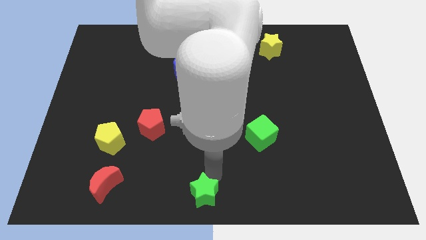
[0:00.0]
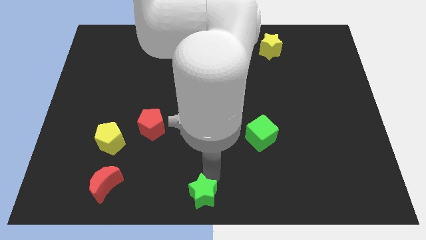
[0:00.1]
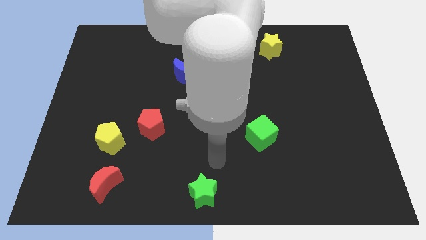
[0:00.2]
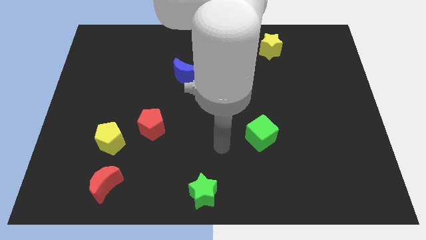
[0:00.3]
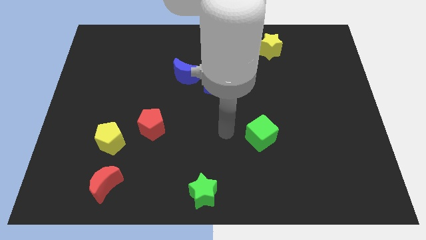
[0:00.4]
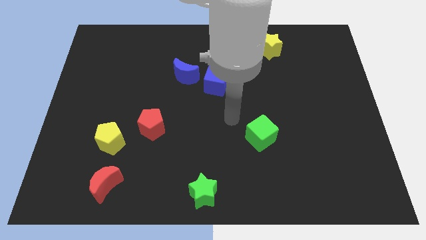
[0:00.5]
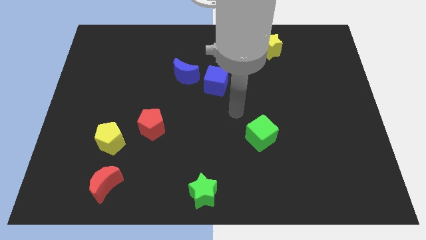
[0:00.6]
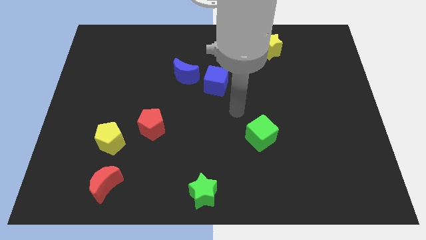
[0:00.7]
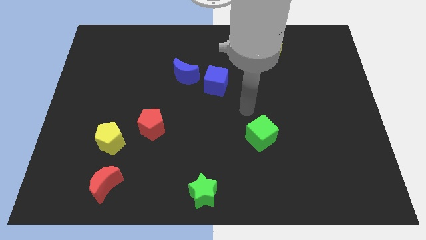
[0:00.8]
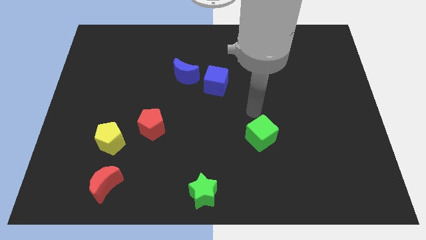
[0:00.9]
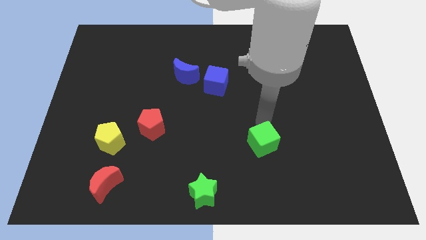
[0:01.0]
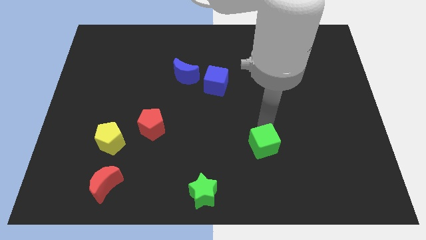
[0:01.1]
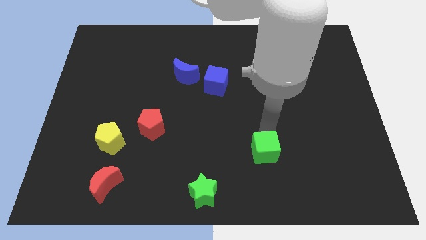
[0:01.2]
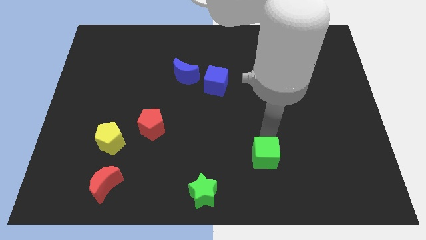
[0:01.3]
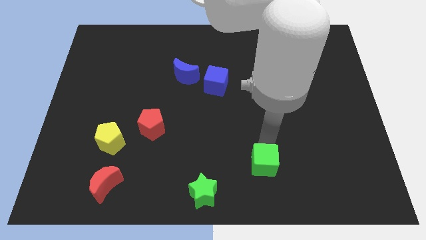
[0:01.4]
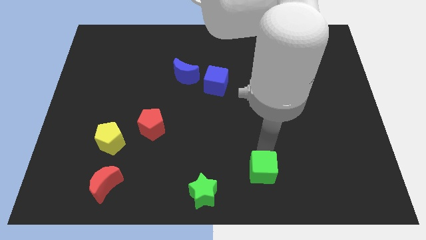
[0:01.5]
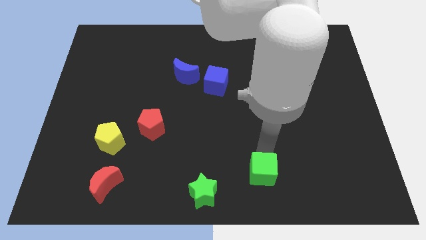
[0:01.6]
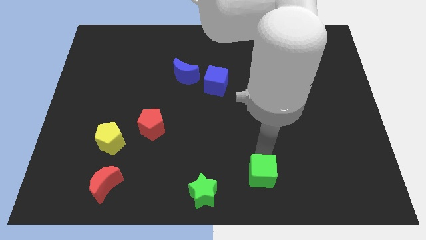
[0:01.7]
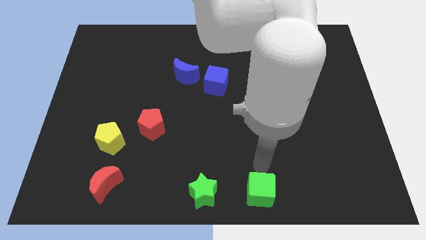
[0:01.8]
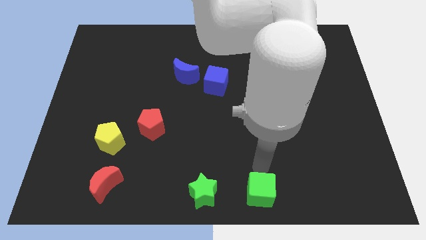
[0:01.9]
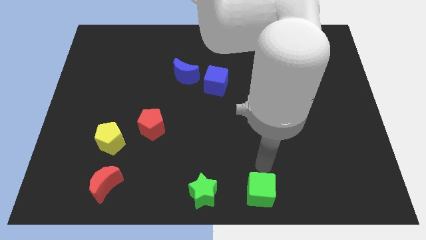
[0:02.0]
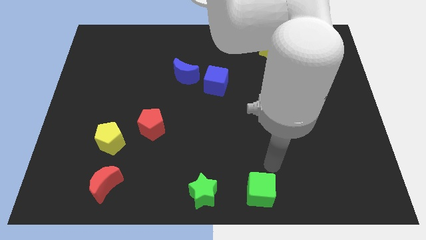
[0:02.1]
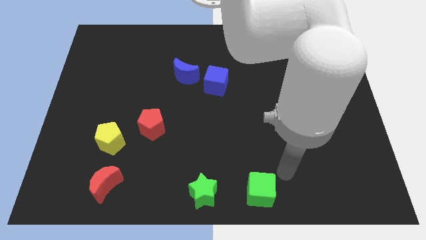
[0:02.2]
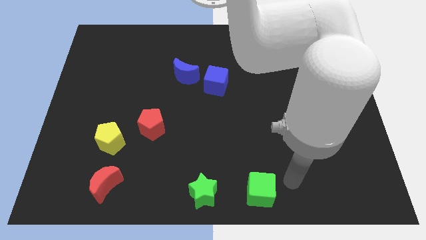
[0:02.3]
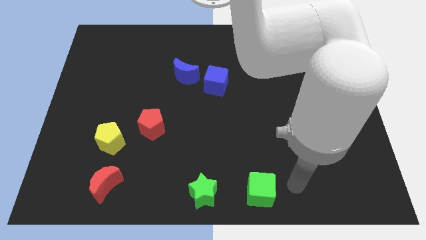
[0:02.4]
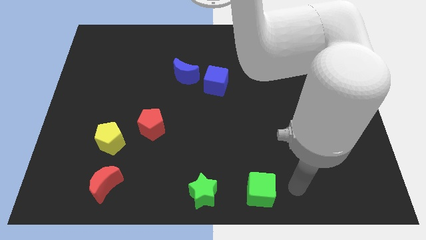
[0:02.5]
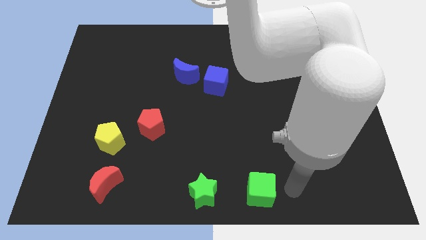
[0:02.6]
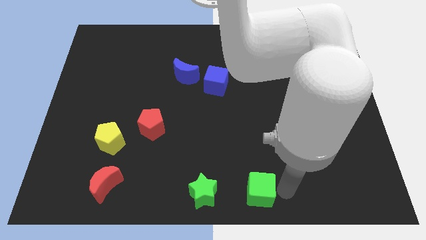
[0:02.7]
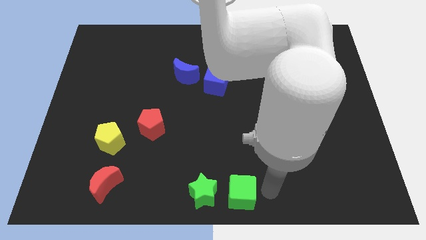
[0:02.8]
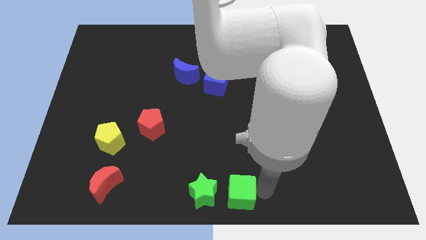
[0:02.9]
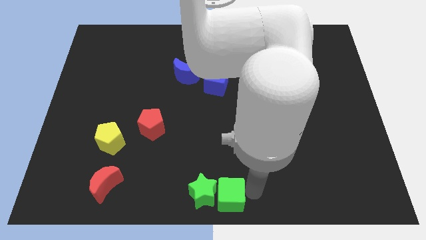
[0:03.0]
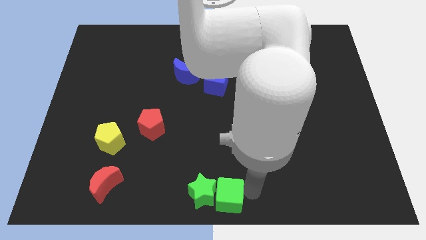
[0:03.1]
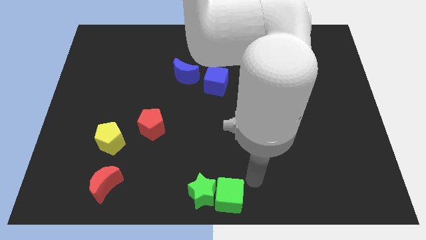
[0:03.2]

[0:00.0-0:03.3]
push green cube beside green star

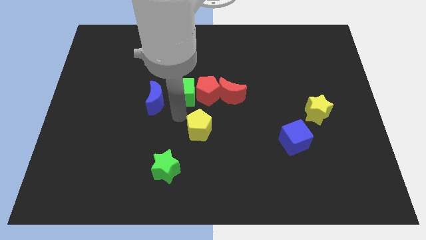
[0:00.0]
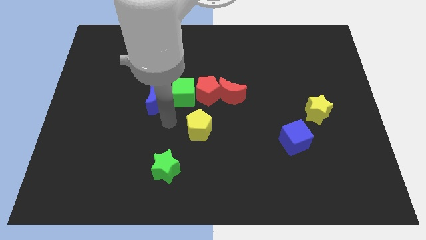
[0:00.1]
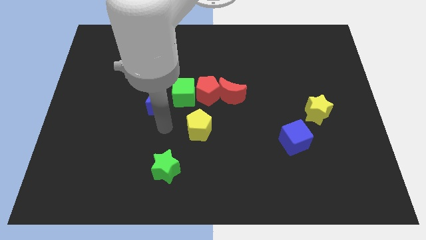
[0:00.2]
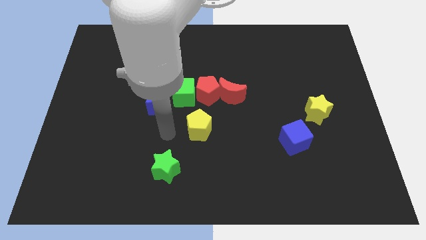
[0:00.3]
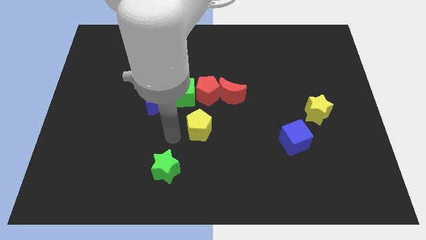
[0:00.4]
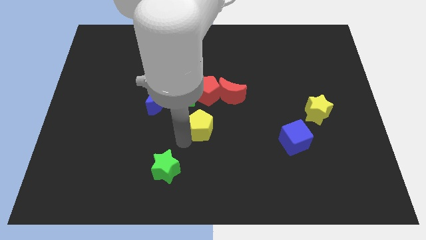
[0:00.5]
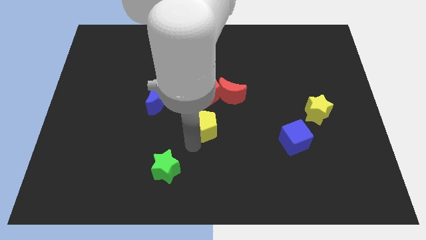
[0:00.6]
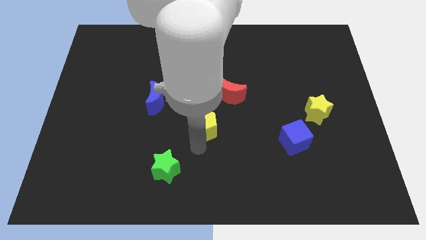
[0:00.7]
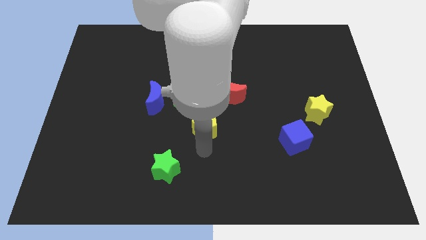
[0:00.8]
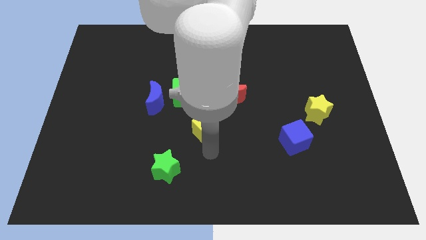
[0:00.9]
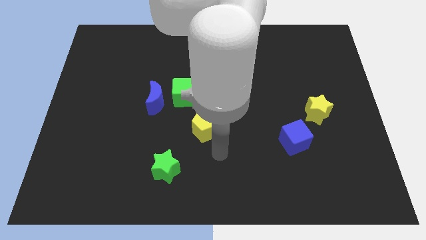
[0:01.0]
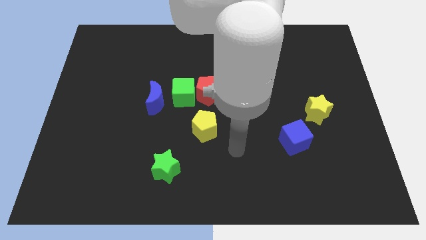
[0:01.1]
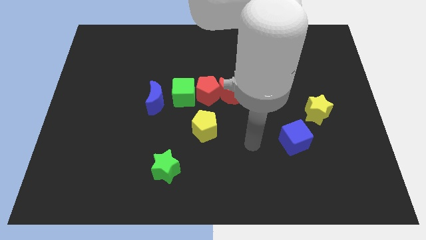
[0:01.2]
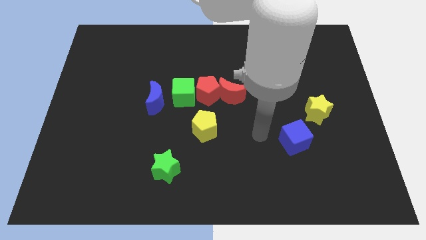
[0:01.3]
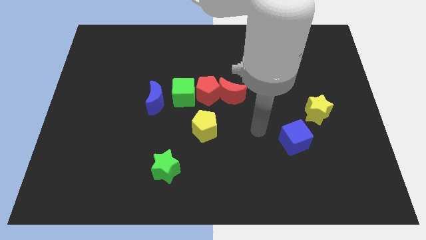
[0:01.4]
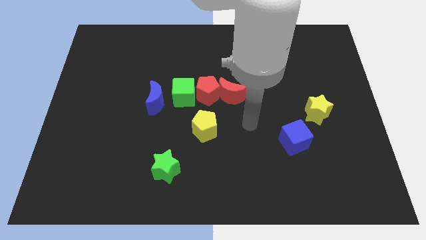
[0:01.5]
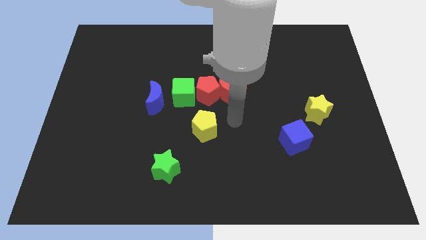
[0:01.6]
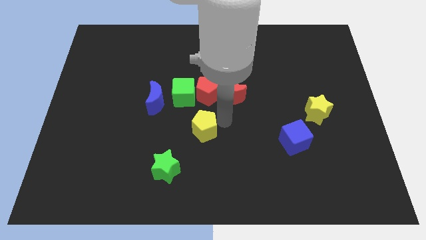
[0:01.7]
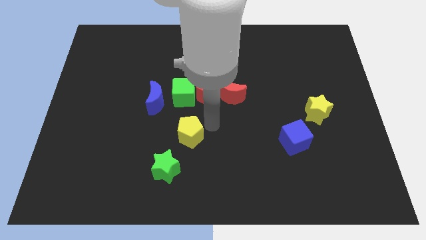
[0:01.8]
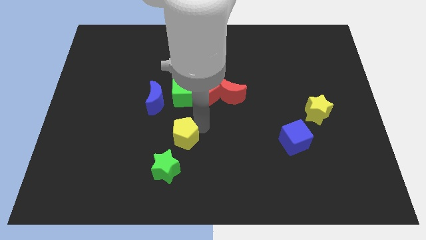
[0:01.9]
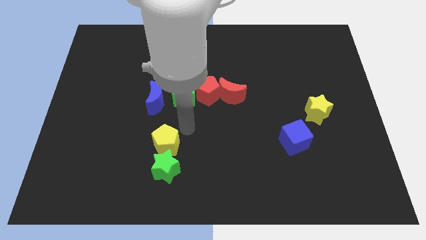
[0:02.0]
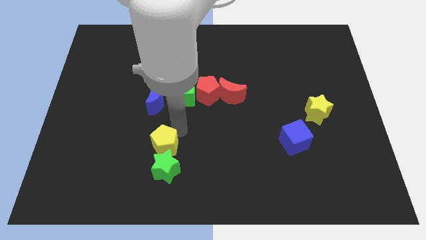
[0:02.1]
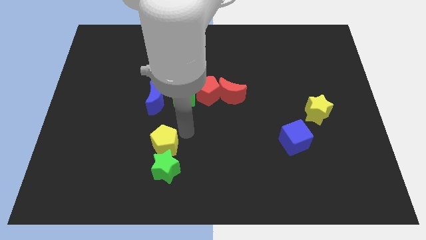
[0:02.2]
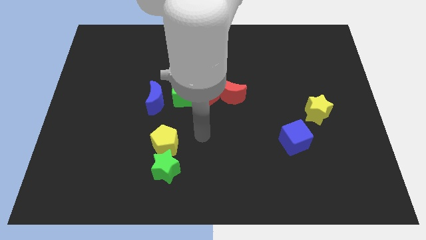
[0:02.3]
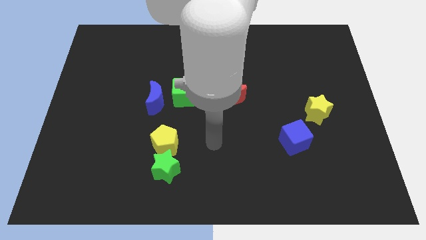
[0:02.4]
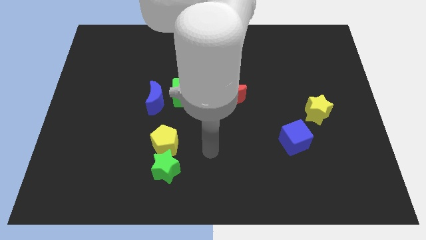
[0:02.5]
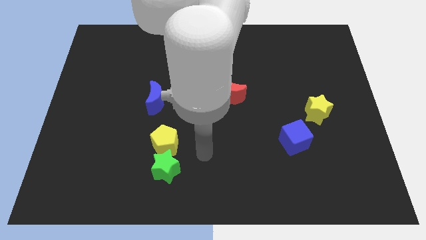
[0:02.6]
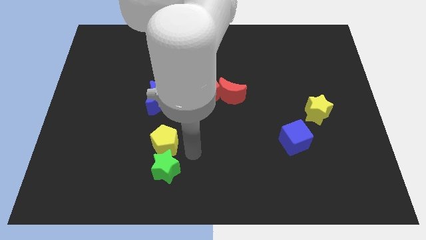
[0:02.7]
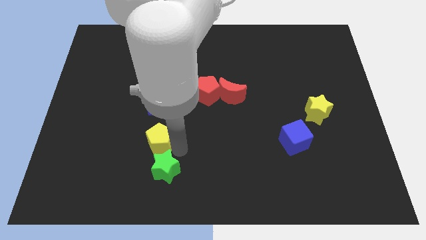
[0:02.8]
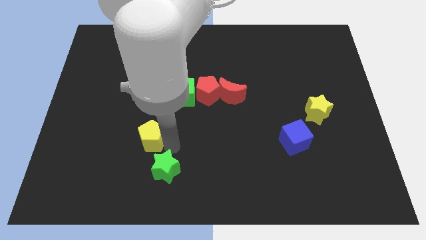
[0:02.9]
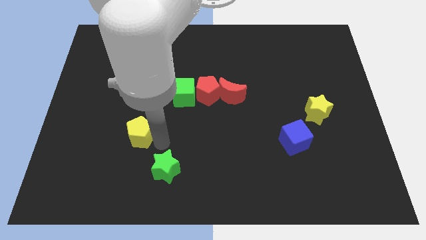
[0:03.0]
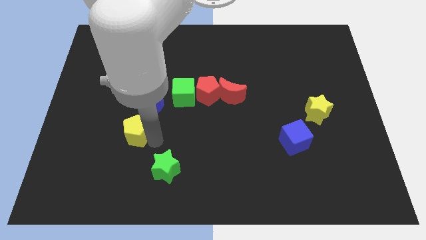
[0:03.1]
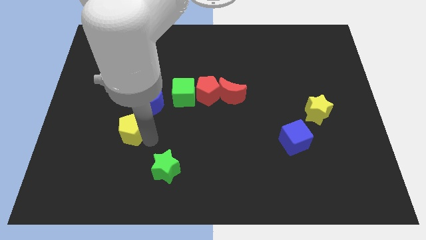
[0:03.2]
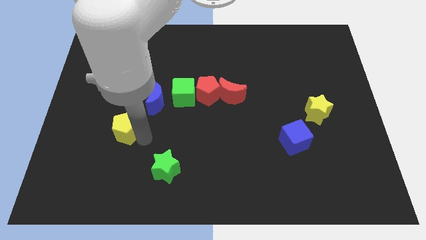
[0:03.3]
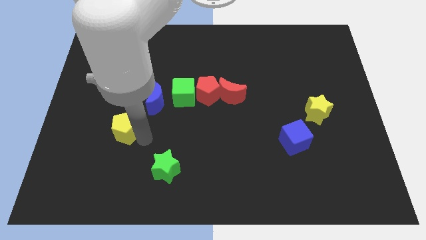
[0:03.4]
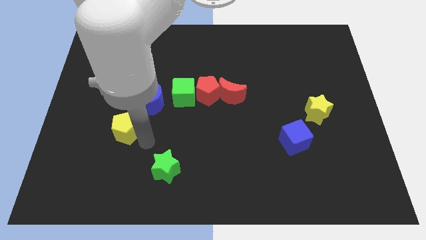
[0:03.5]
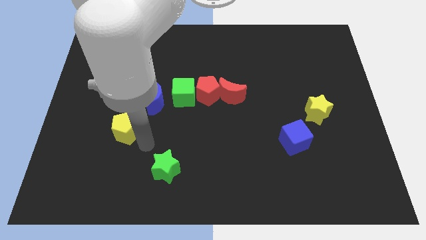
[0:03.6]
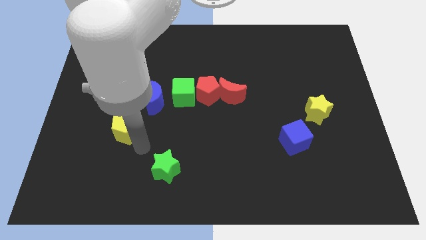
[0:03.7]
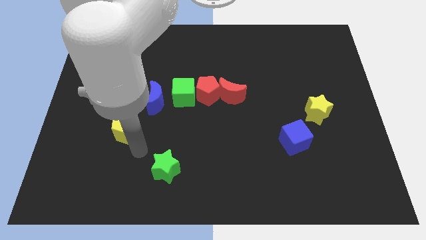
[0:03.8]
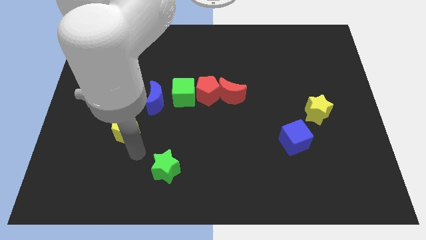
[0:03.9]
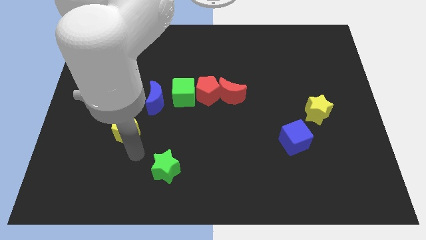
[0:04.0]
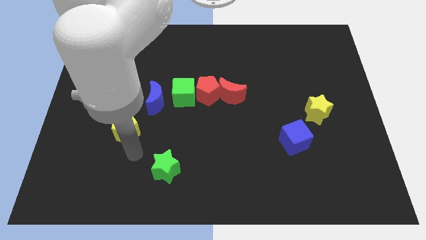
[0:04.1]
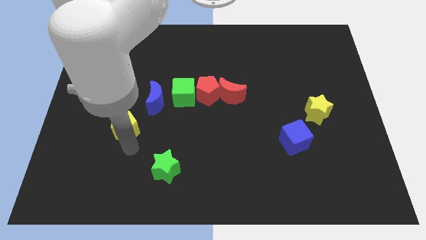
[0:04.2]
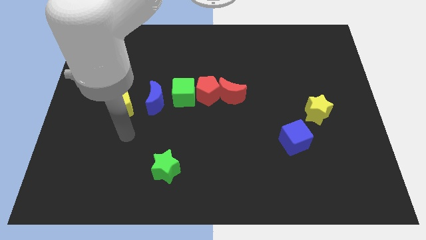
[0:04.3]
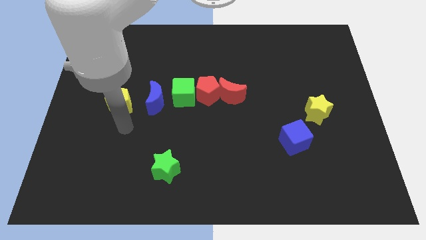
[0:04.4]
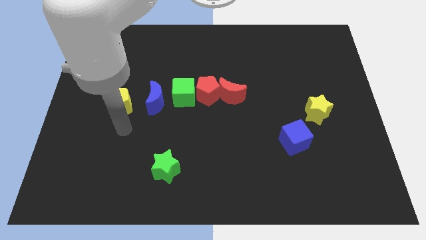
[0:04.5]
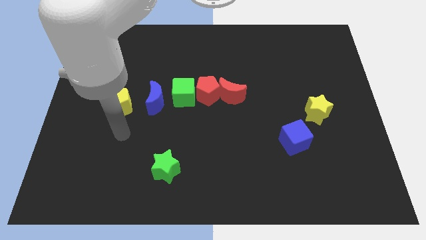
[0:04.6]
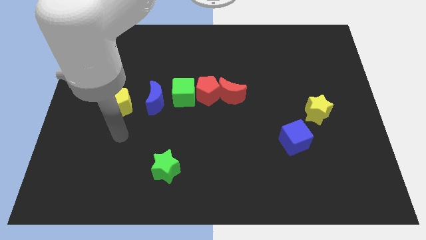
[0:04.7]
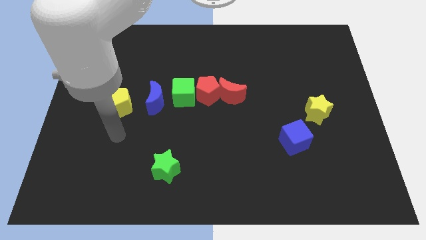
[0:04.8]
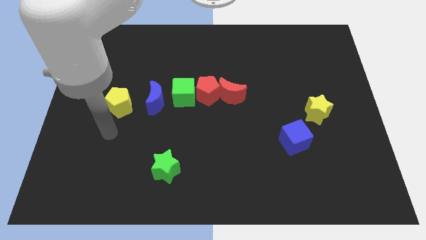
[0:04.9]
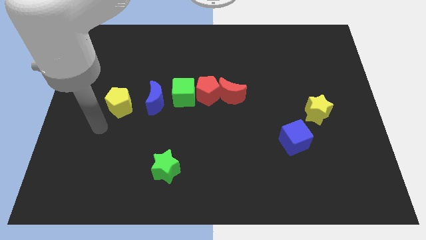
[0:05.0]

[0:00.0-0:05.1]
move the yellow pentagon towards the left of blue moon

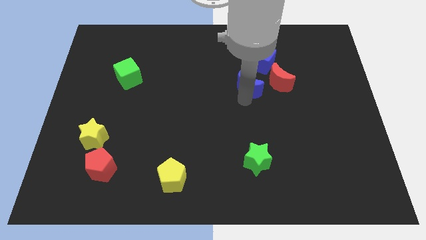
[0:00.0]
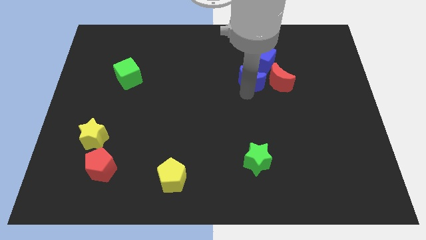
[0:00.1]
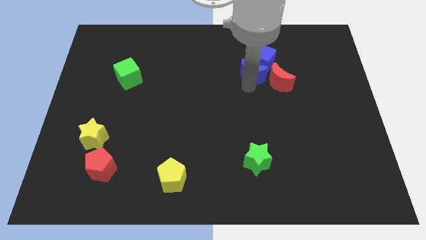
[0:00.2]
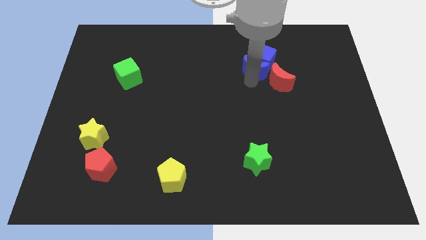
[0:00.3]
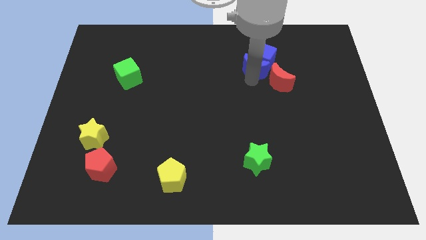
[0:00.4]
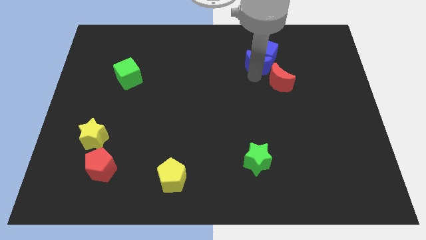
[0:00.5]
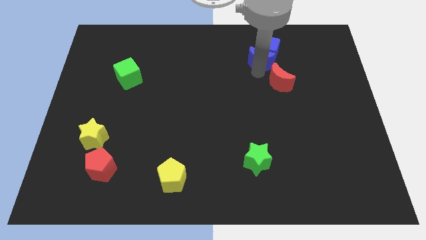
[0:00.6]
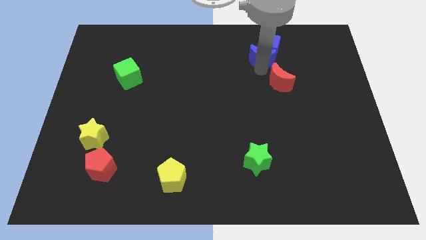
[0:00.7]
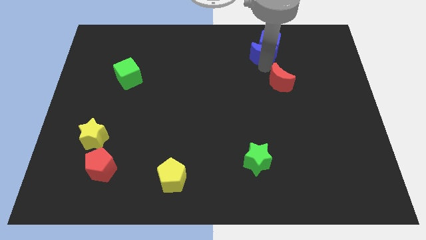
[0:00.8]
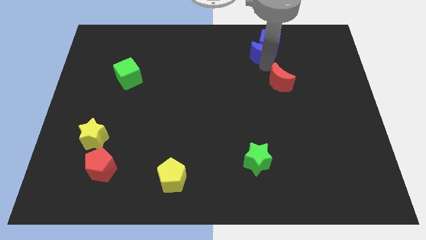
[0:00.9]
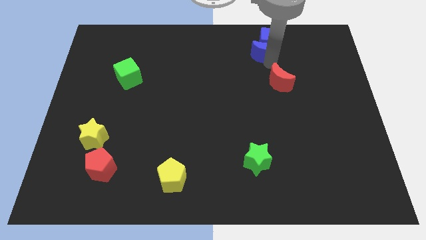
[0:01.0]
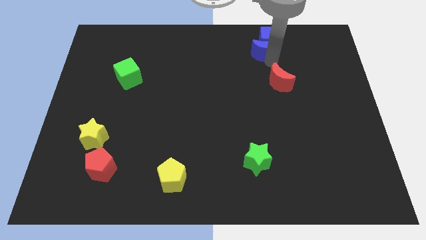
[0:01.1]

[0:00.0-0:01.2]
push the blue crescent into the blue moon
